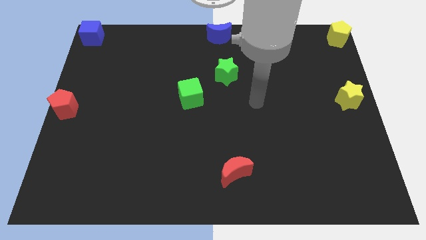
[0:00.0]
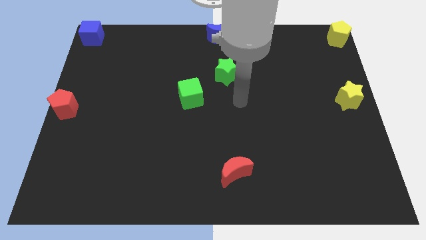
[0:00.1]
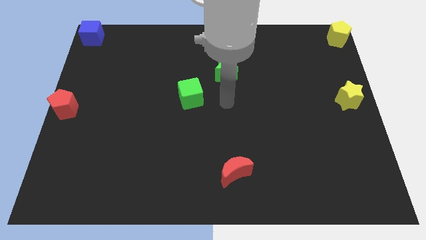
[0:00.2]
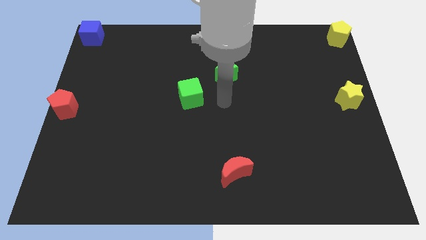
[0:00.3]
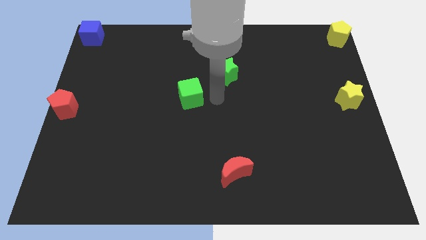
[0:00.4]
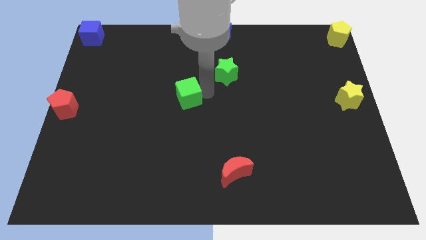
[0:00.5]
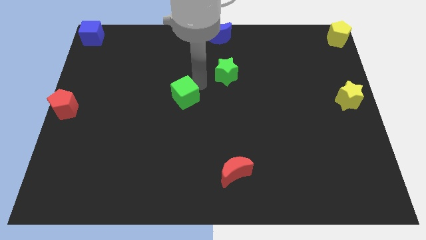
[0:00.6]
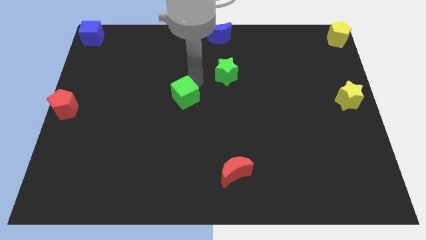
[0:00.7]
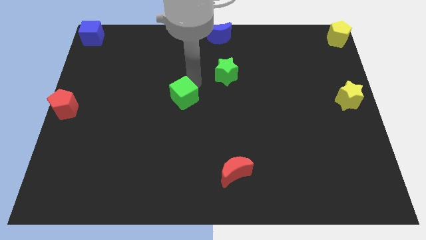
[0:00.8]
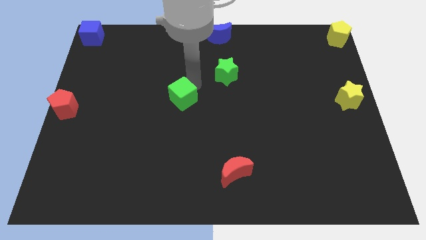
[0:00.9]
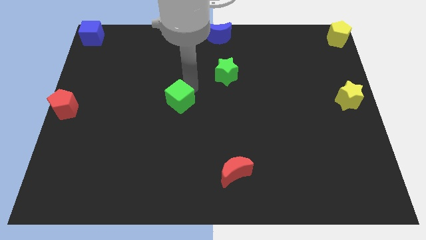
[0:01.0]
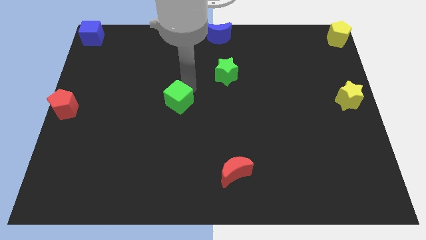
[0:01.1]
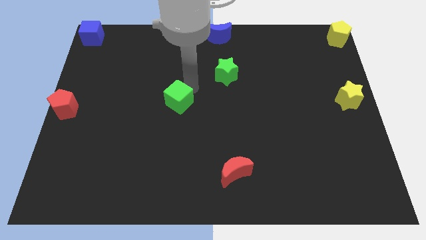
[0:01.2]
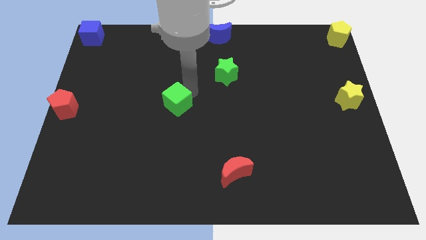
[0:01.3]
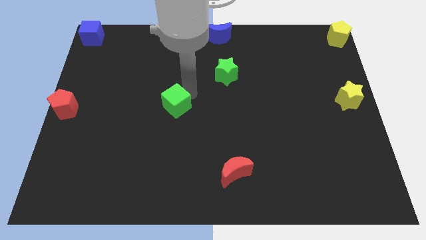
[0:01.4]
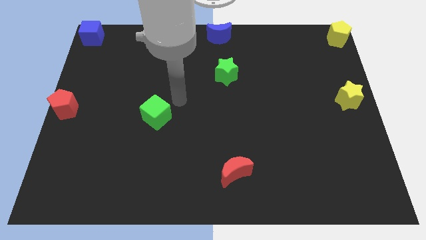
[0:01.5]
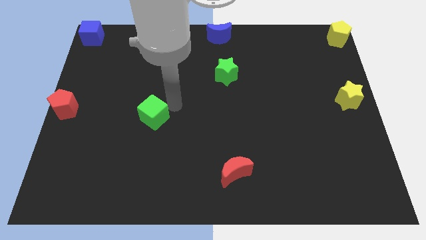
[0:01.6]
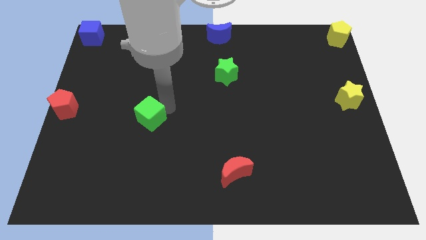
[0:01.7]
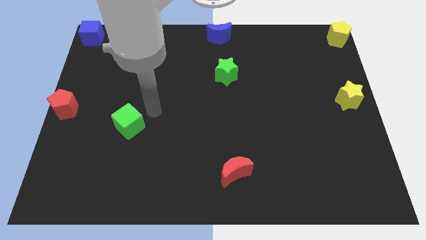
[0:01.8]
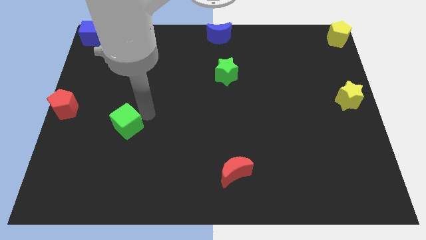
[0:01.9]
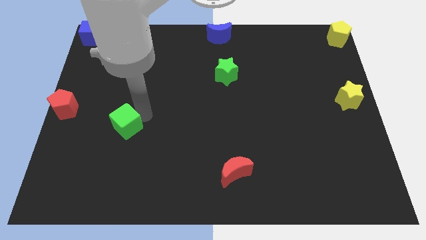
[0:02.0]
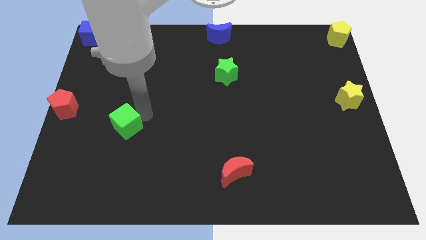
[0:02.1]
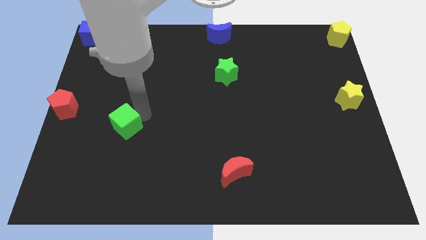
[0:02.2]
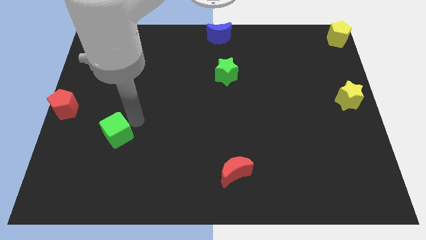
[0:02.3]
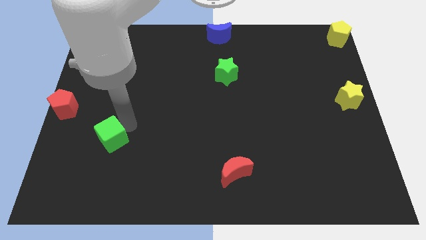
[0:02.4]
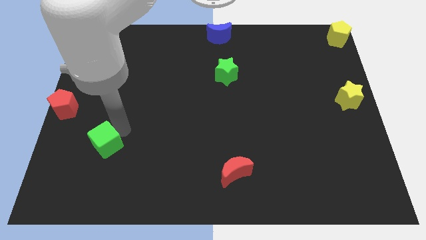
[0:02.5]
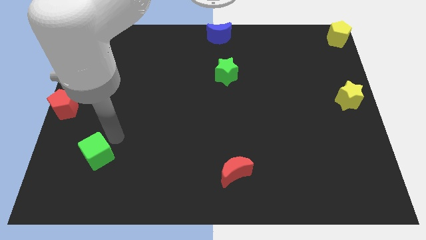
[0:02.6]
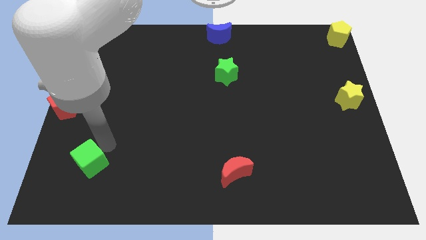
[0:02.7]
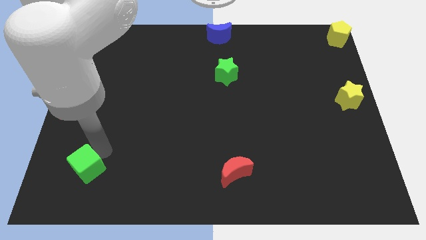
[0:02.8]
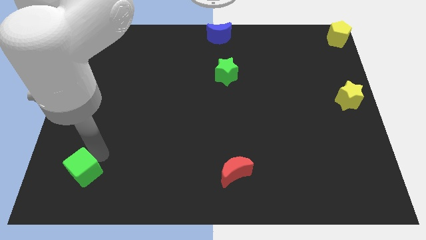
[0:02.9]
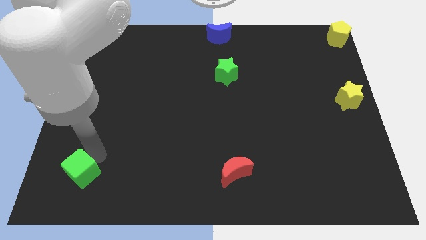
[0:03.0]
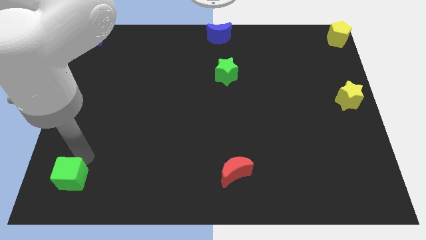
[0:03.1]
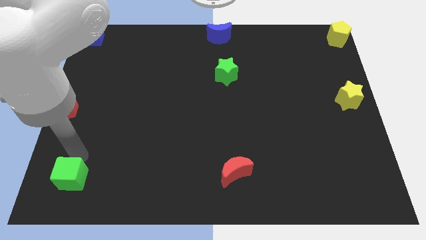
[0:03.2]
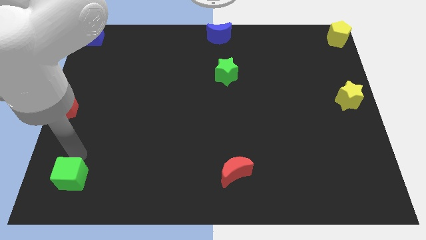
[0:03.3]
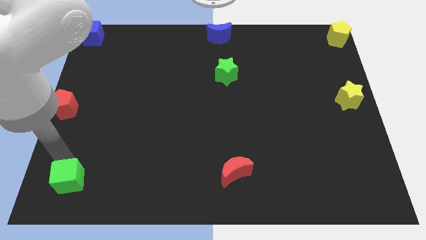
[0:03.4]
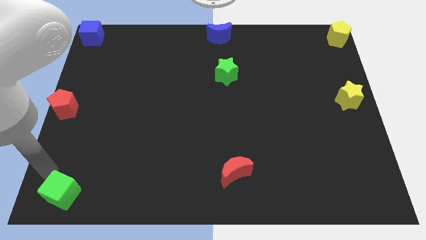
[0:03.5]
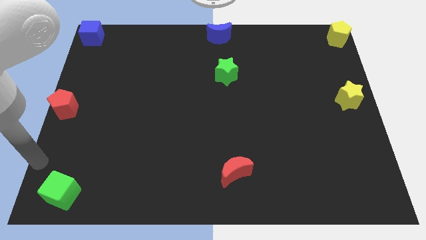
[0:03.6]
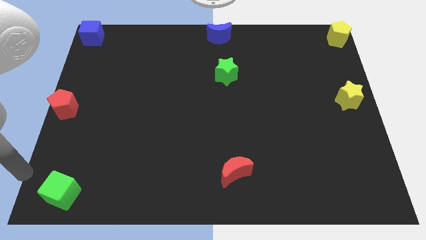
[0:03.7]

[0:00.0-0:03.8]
move the green cube towards the bottom left side of the board

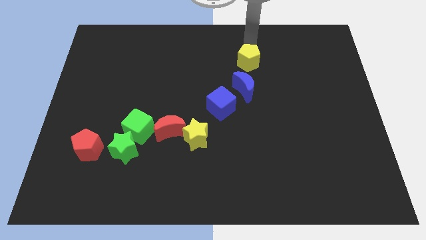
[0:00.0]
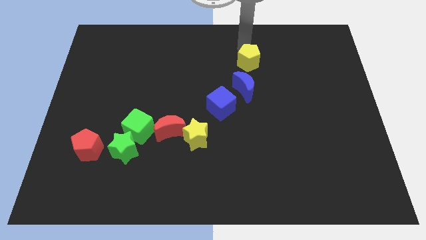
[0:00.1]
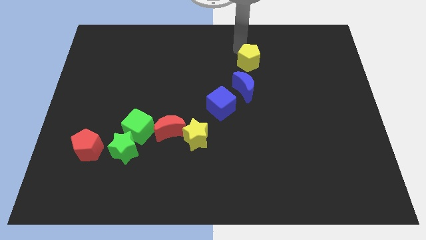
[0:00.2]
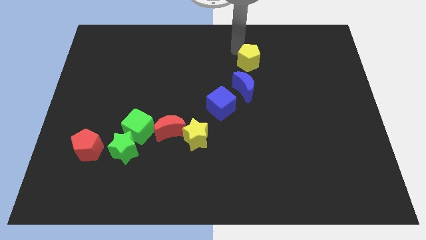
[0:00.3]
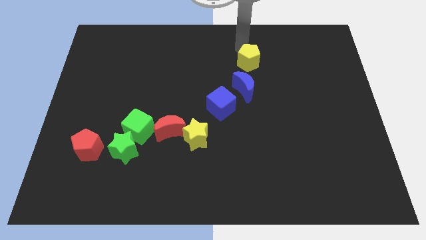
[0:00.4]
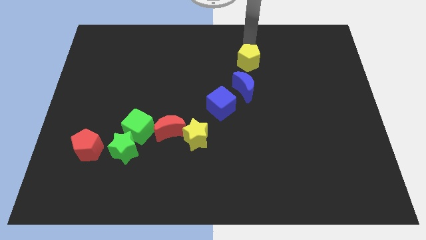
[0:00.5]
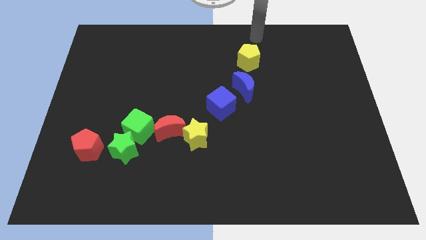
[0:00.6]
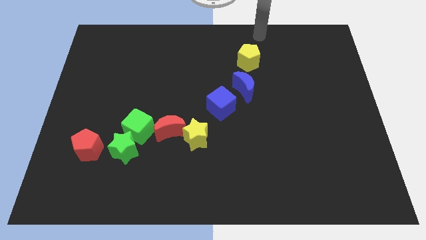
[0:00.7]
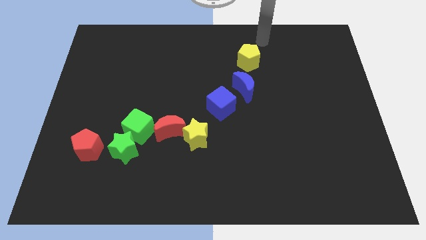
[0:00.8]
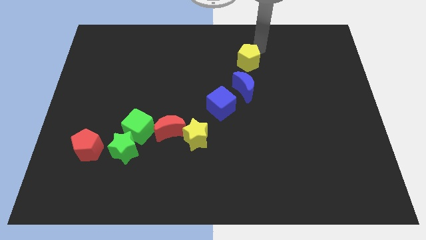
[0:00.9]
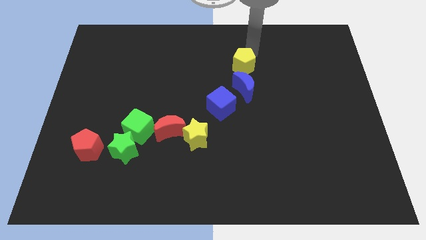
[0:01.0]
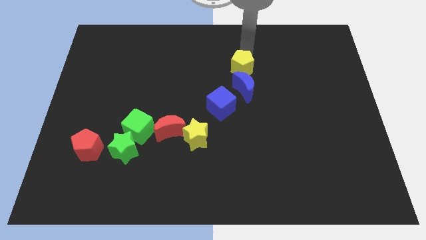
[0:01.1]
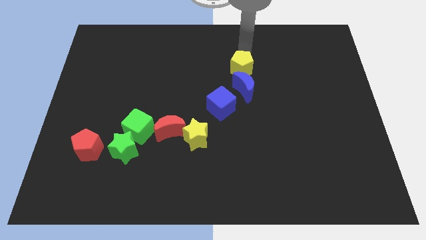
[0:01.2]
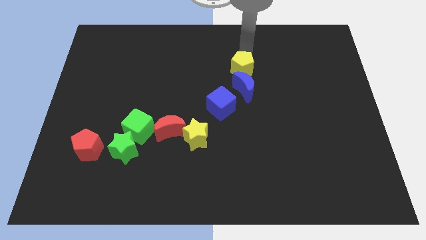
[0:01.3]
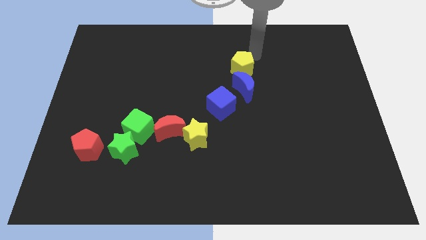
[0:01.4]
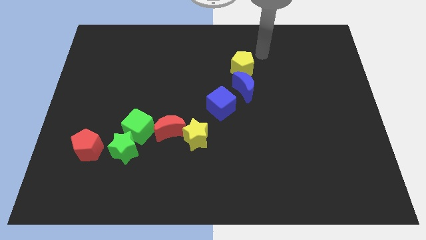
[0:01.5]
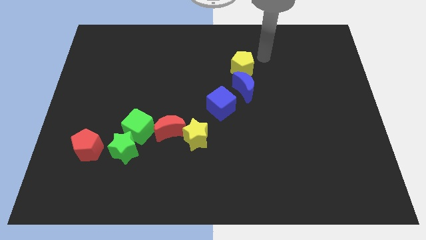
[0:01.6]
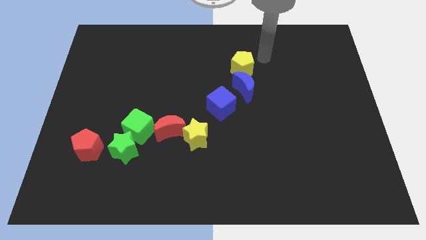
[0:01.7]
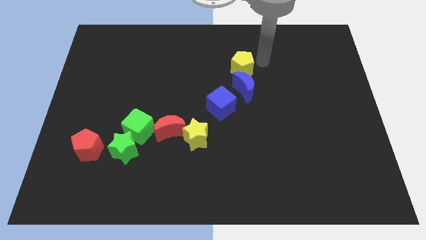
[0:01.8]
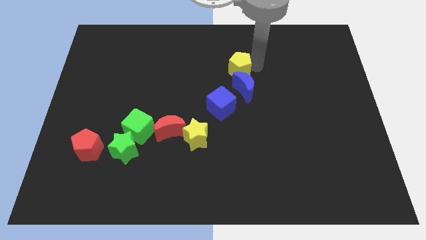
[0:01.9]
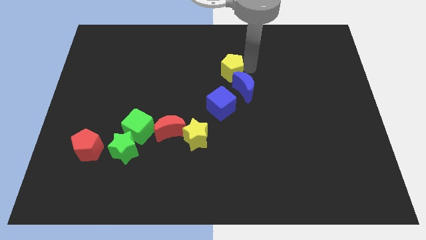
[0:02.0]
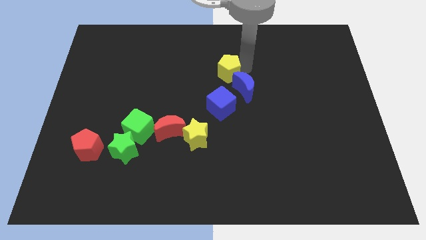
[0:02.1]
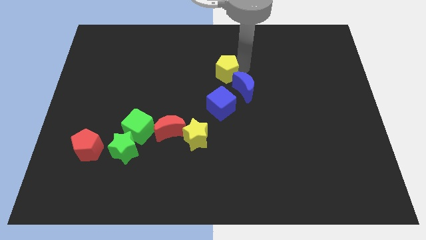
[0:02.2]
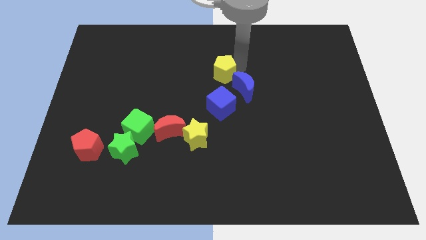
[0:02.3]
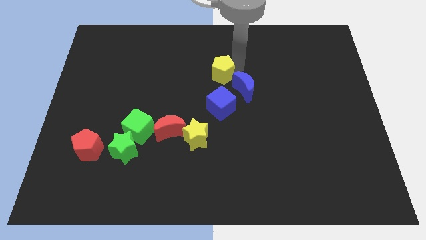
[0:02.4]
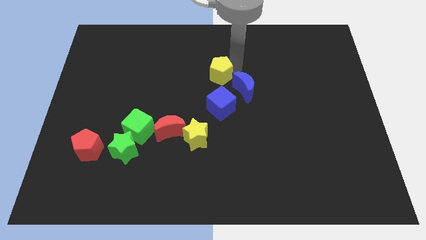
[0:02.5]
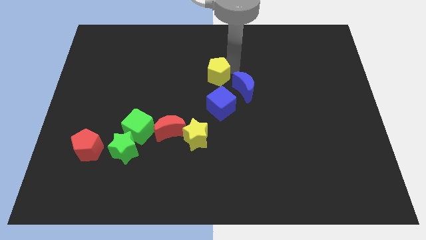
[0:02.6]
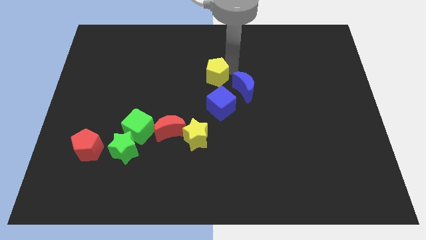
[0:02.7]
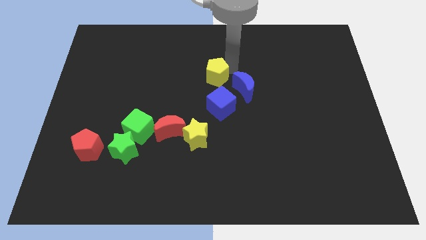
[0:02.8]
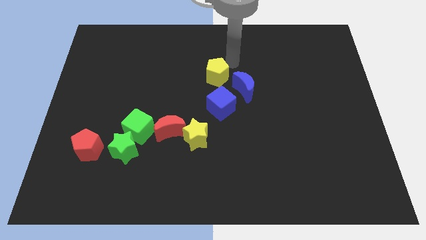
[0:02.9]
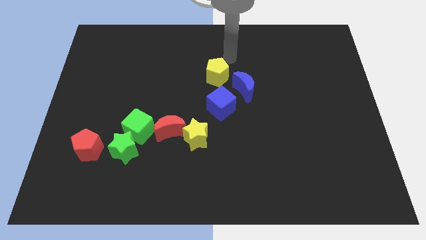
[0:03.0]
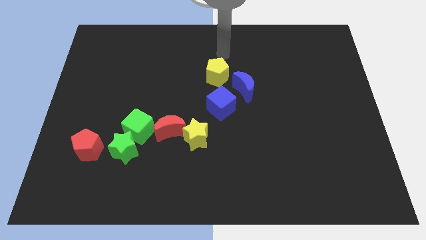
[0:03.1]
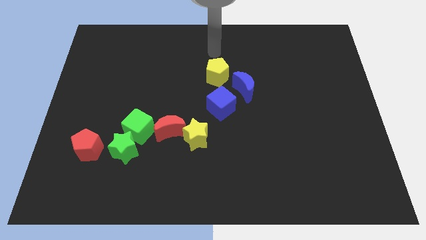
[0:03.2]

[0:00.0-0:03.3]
place the yellow pentagon parallel to the top center

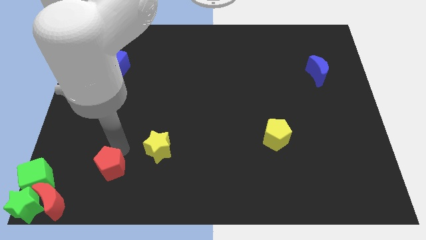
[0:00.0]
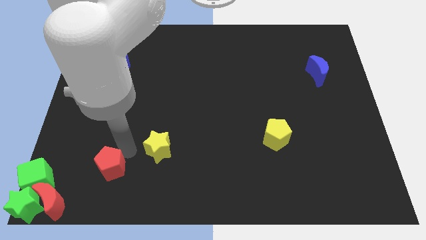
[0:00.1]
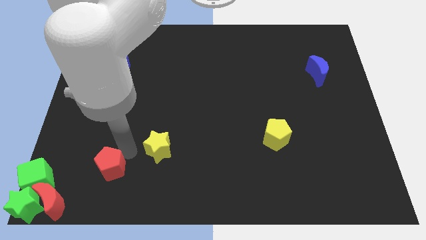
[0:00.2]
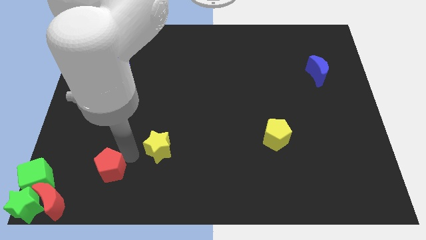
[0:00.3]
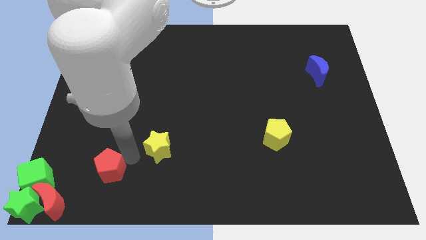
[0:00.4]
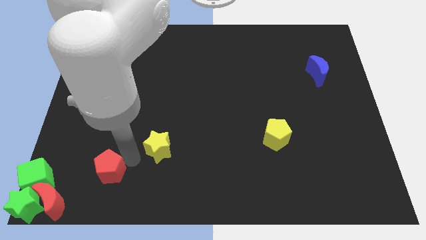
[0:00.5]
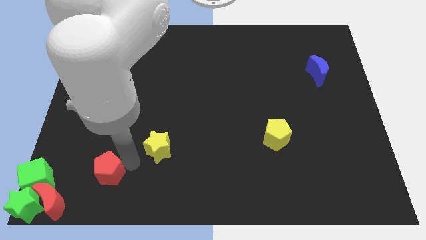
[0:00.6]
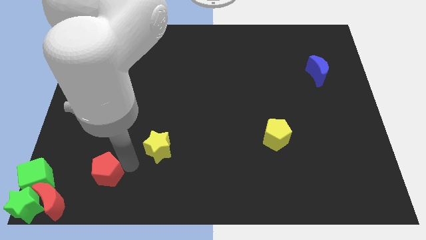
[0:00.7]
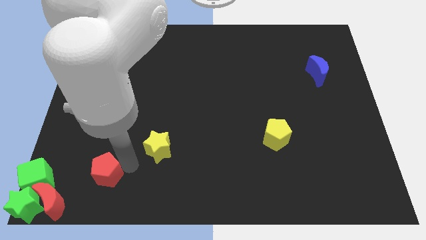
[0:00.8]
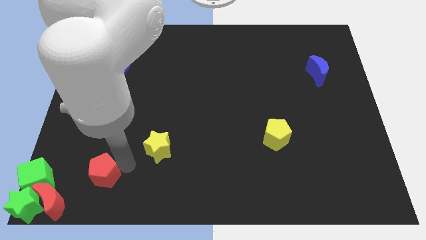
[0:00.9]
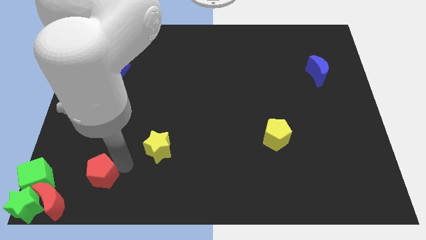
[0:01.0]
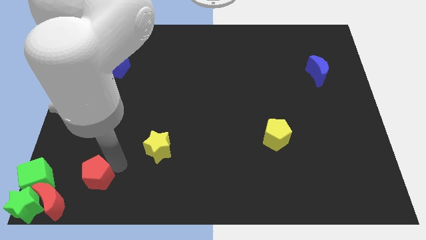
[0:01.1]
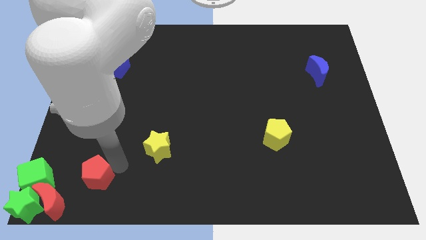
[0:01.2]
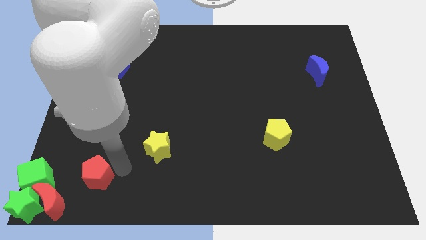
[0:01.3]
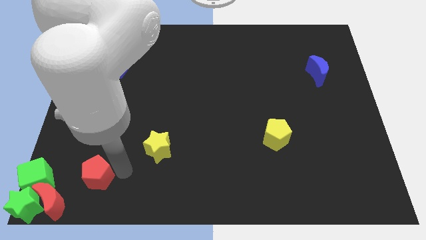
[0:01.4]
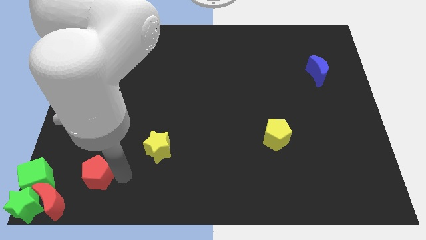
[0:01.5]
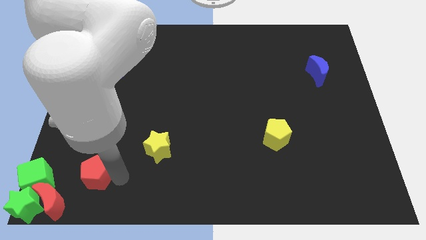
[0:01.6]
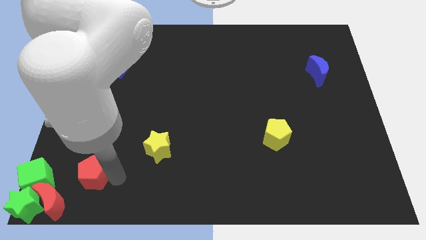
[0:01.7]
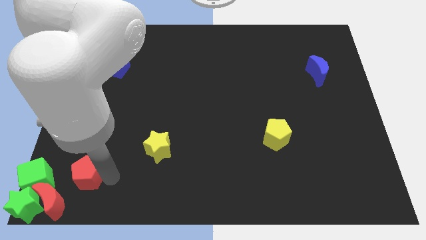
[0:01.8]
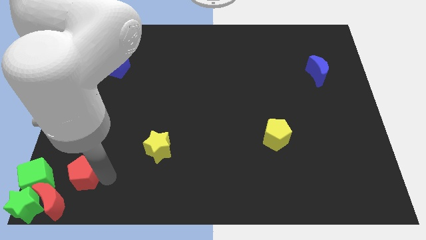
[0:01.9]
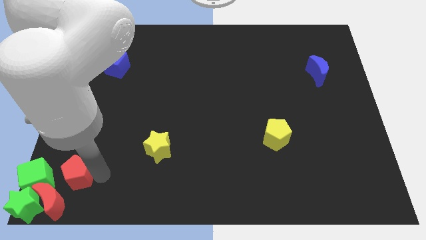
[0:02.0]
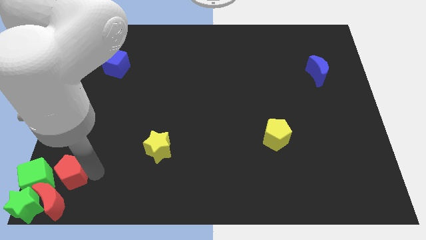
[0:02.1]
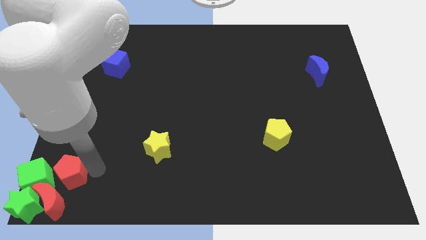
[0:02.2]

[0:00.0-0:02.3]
move the red pentagon to the right of the green cube
